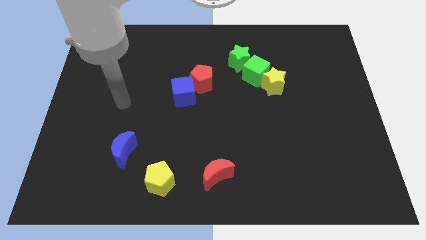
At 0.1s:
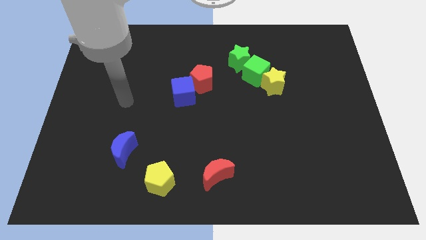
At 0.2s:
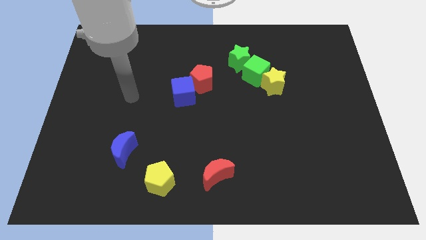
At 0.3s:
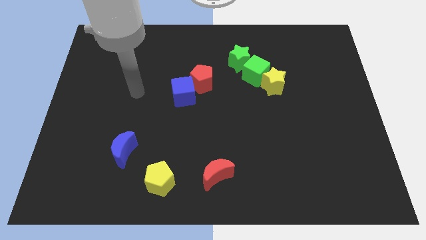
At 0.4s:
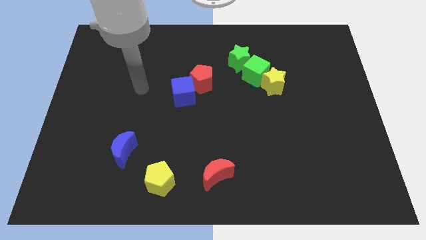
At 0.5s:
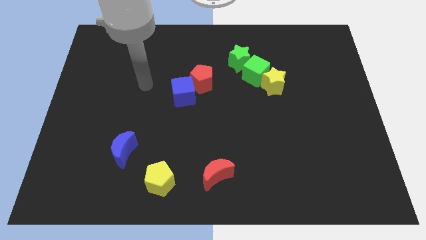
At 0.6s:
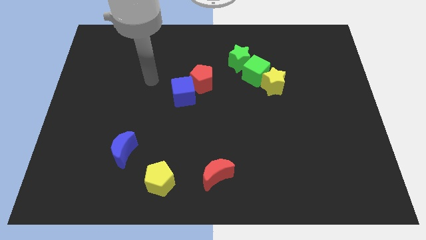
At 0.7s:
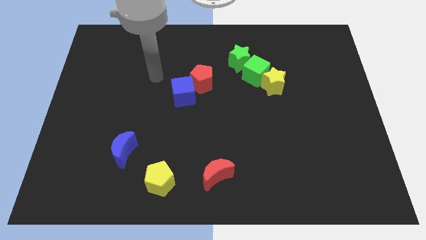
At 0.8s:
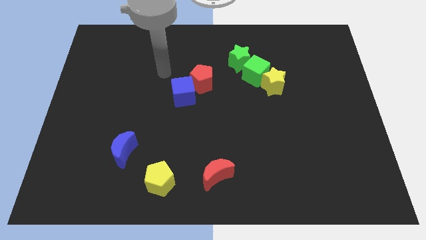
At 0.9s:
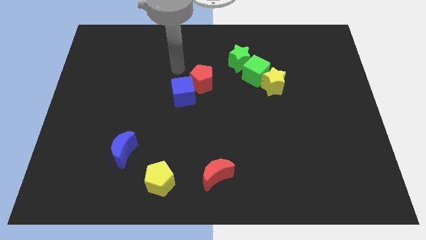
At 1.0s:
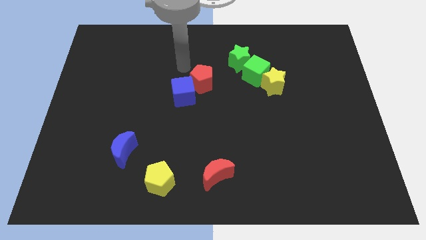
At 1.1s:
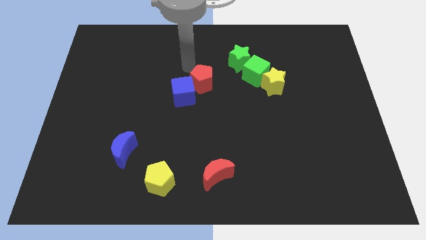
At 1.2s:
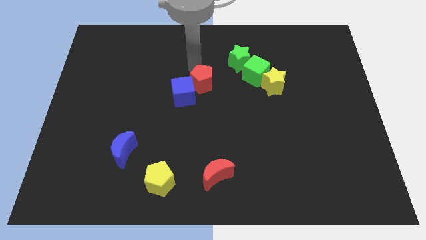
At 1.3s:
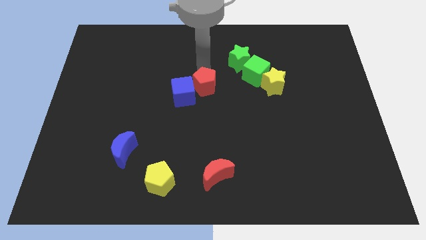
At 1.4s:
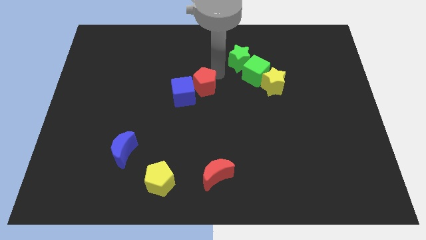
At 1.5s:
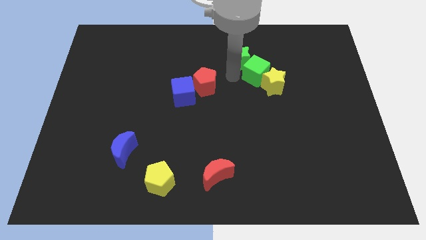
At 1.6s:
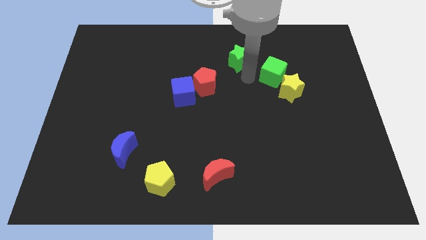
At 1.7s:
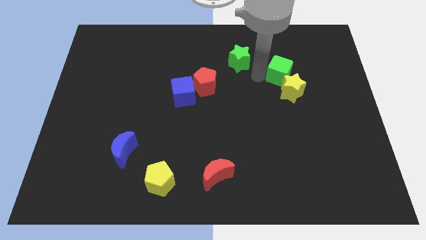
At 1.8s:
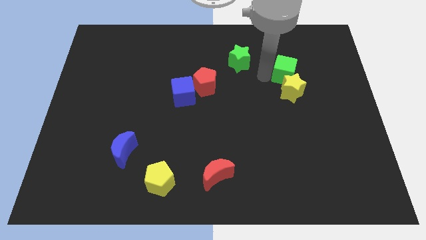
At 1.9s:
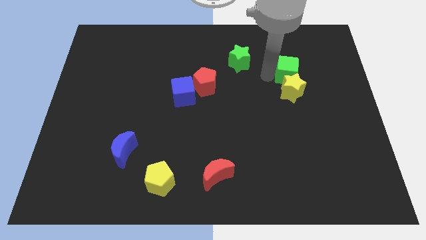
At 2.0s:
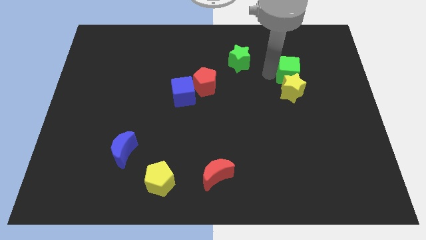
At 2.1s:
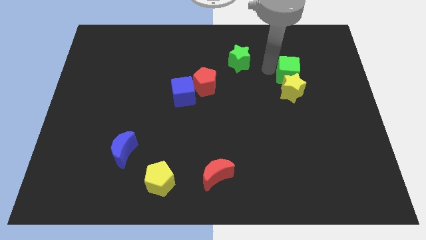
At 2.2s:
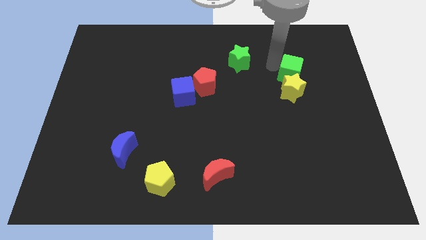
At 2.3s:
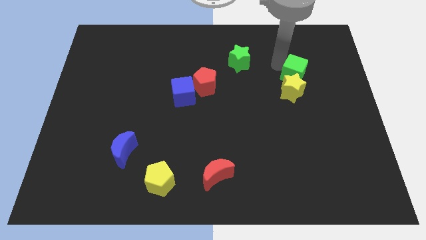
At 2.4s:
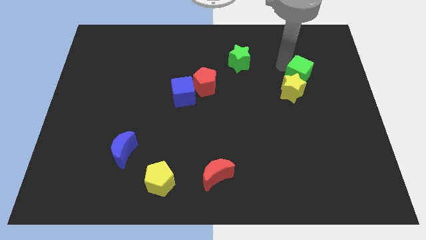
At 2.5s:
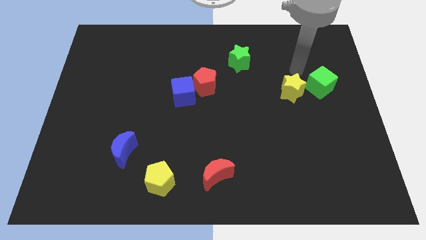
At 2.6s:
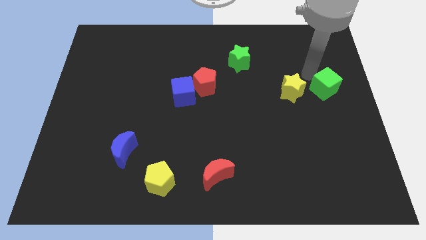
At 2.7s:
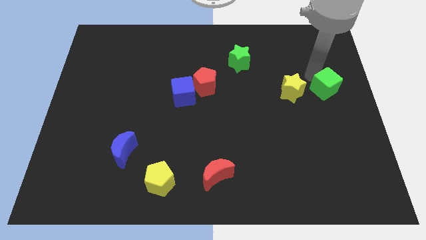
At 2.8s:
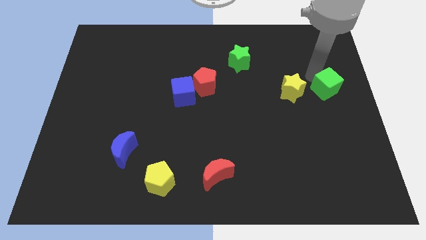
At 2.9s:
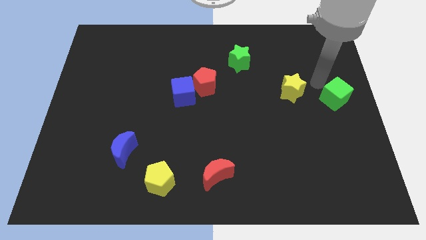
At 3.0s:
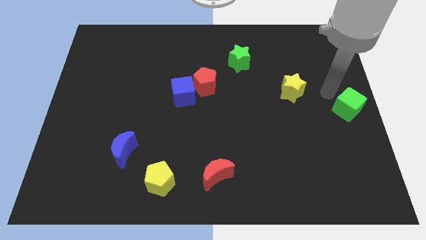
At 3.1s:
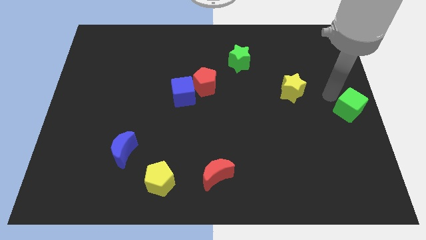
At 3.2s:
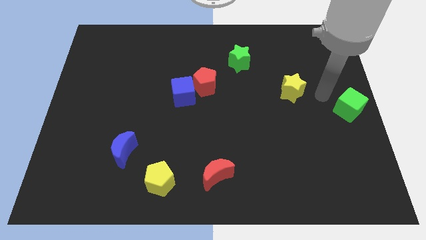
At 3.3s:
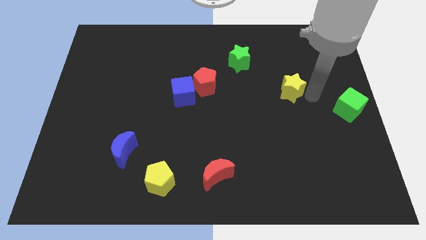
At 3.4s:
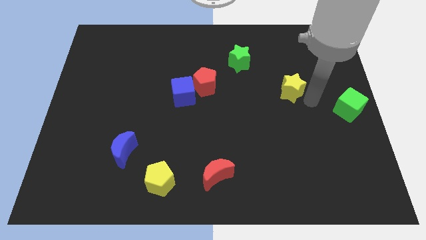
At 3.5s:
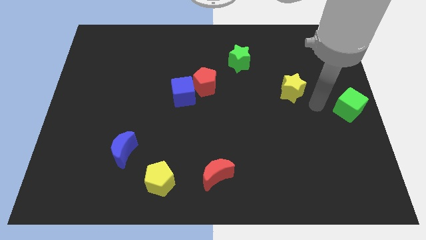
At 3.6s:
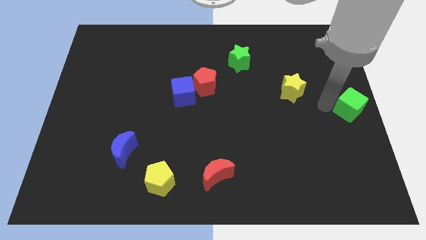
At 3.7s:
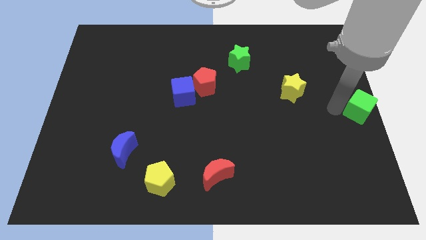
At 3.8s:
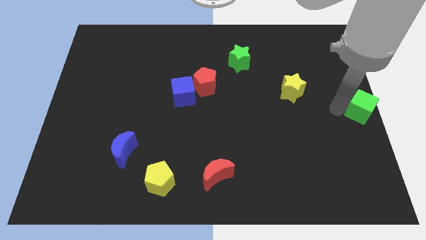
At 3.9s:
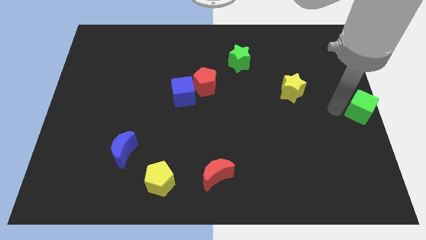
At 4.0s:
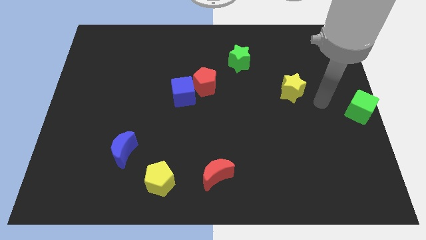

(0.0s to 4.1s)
place the green cube to the center right of the board

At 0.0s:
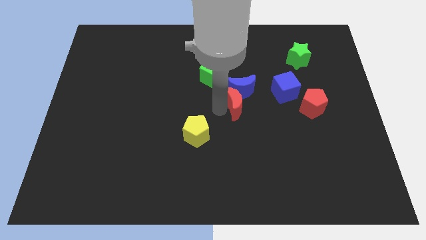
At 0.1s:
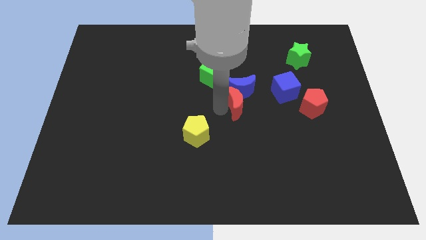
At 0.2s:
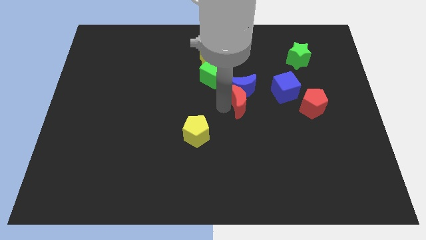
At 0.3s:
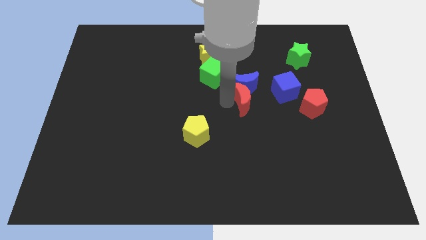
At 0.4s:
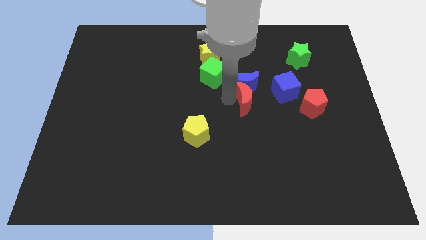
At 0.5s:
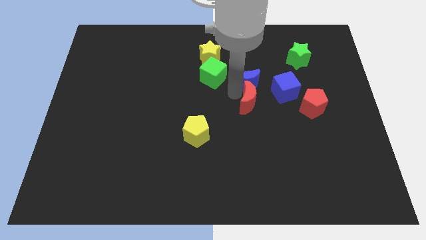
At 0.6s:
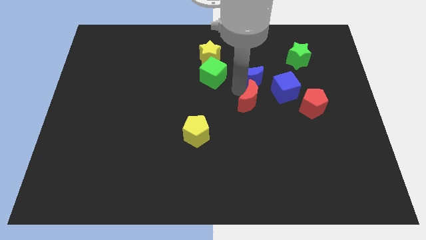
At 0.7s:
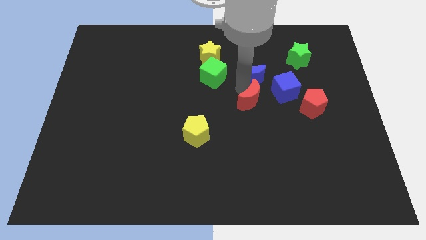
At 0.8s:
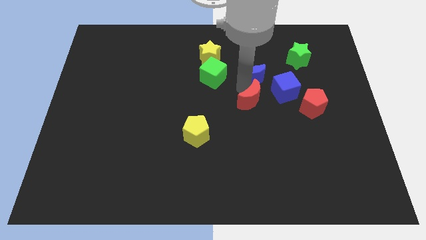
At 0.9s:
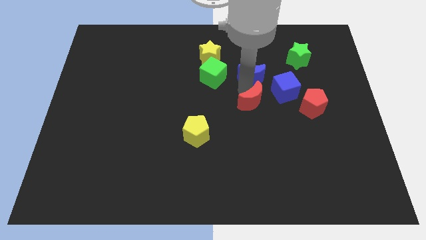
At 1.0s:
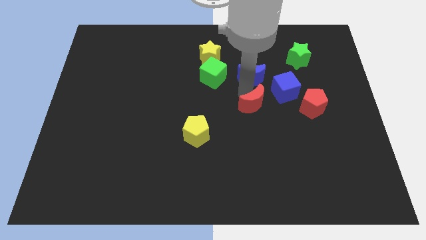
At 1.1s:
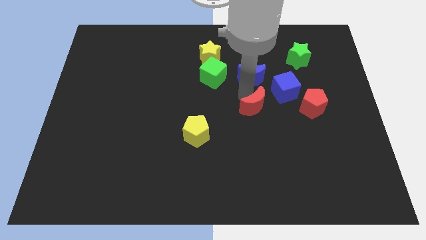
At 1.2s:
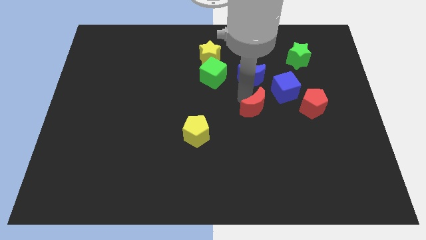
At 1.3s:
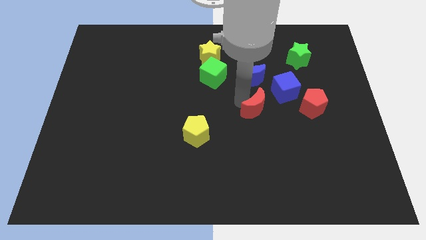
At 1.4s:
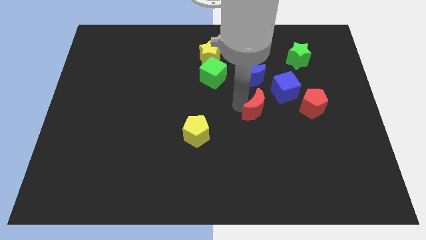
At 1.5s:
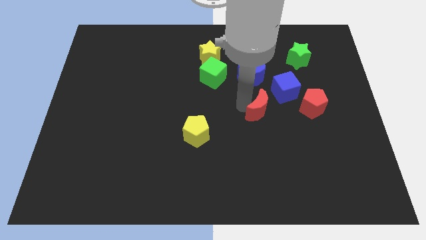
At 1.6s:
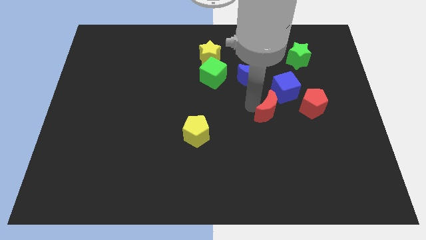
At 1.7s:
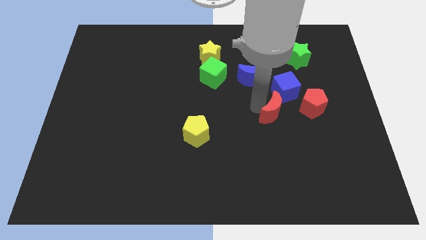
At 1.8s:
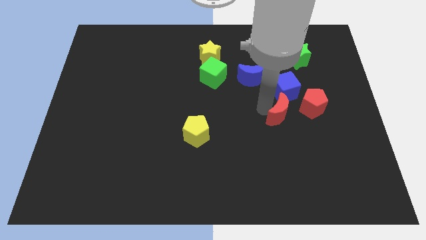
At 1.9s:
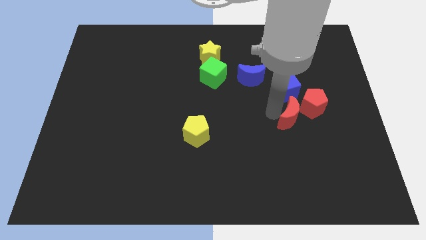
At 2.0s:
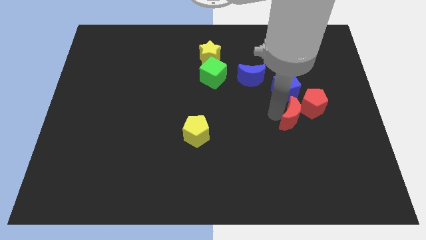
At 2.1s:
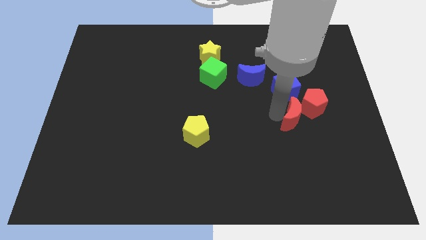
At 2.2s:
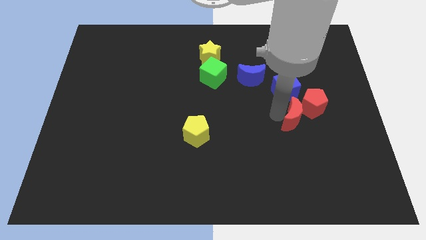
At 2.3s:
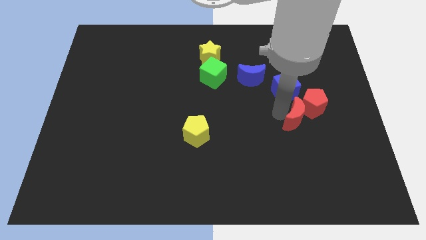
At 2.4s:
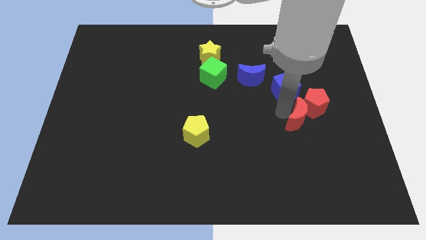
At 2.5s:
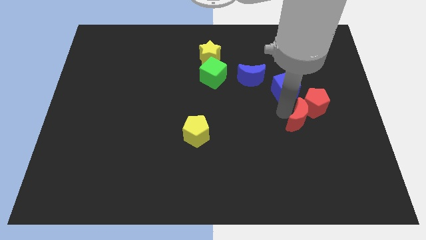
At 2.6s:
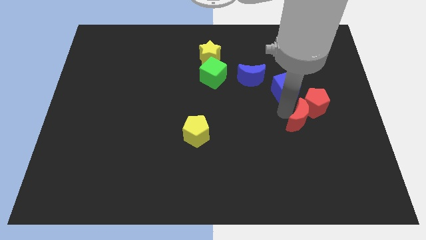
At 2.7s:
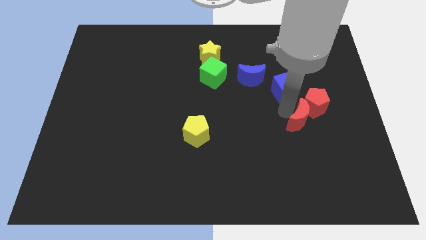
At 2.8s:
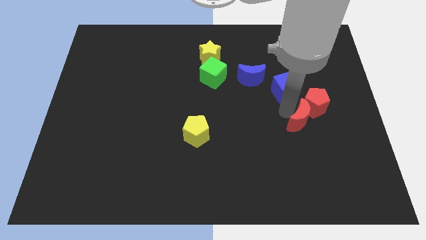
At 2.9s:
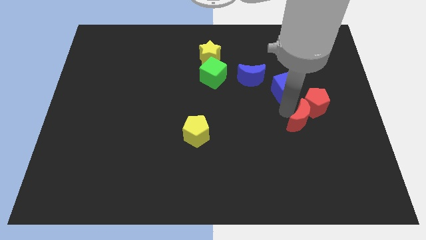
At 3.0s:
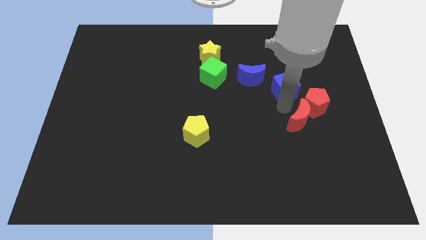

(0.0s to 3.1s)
separate the red crescent from blue crescent

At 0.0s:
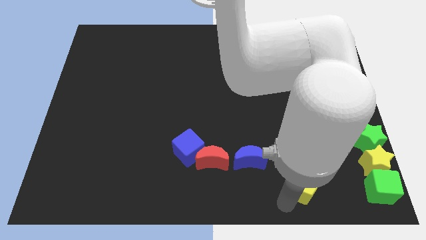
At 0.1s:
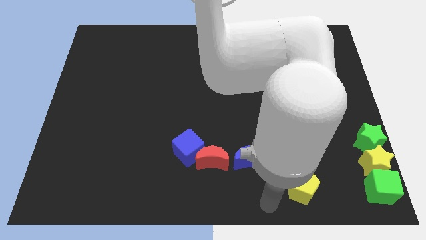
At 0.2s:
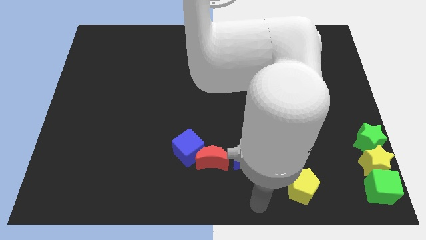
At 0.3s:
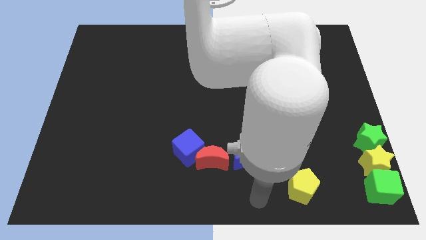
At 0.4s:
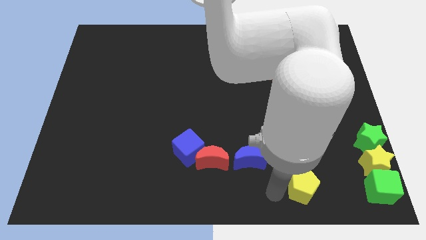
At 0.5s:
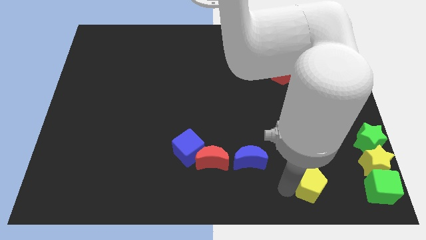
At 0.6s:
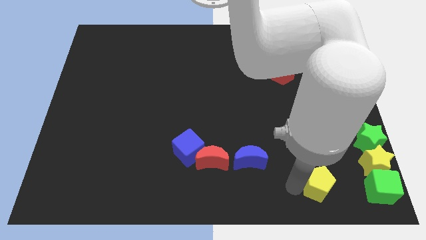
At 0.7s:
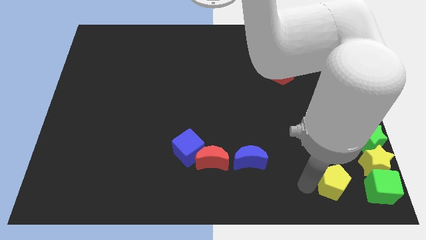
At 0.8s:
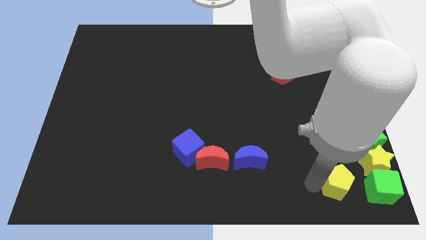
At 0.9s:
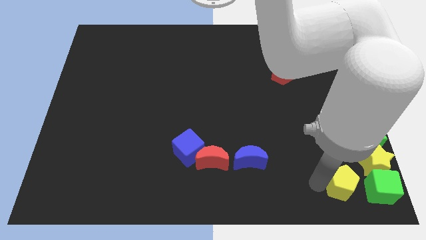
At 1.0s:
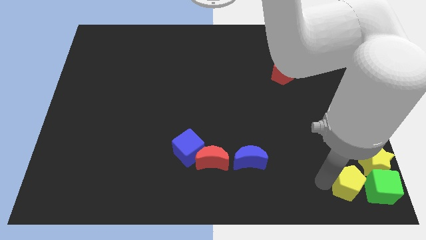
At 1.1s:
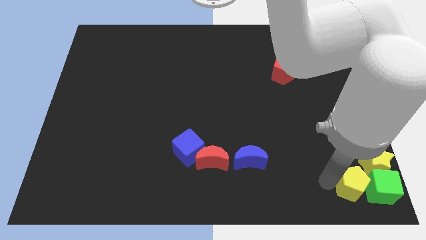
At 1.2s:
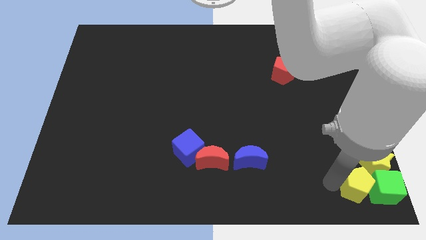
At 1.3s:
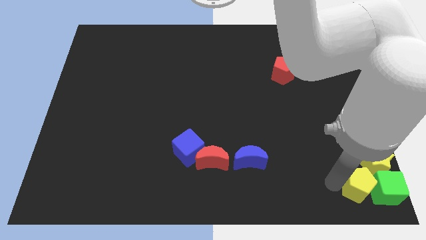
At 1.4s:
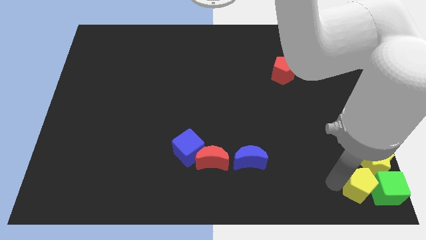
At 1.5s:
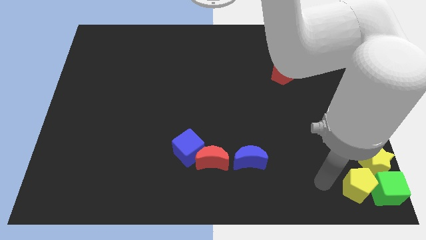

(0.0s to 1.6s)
move the yellow pentagon to the left side of the green cube

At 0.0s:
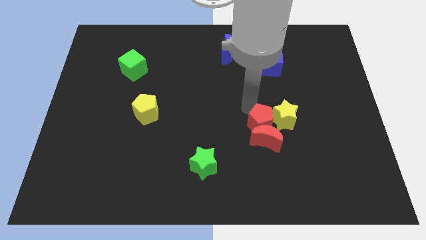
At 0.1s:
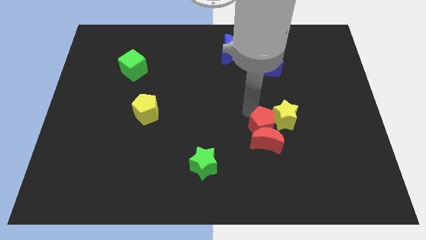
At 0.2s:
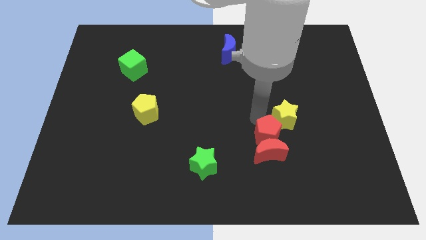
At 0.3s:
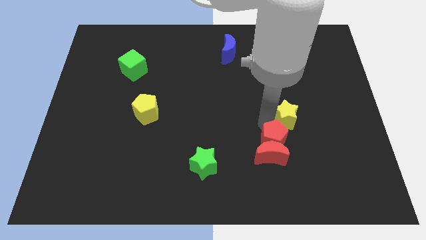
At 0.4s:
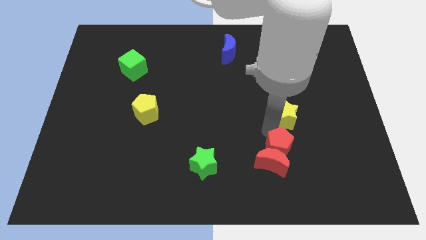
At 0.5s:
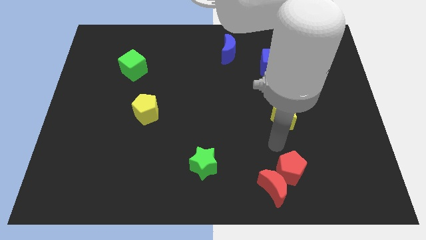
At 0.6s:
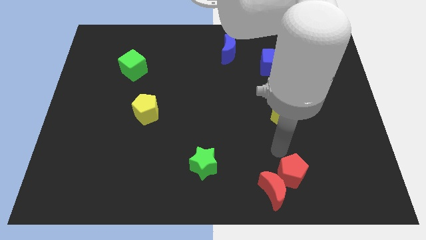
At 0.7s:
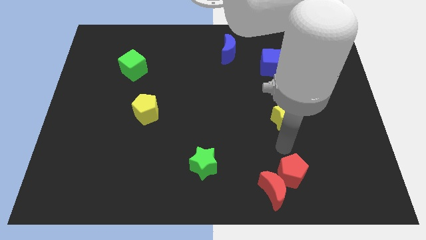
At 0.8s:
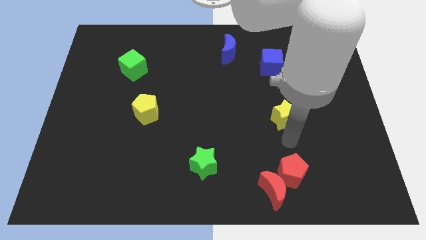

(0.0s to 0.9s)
push the red pentagon and red moon downward
